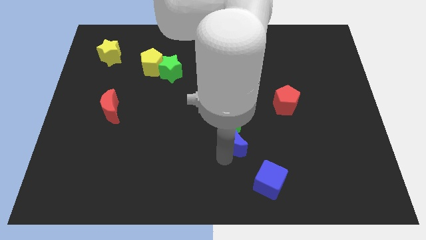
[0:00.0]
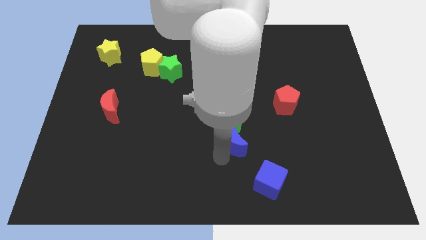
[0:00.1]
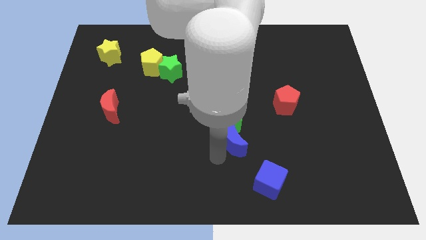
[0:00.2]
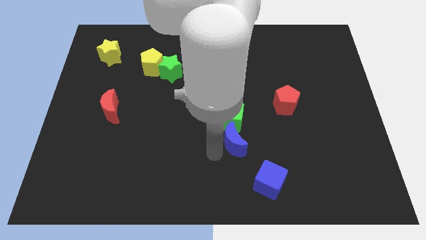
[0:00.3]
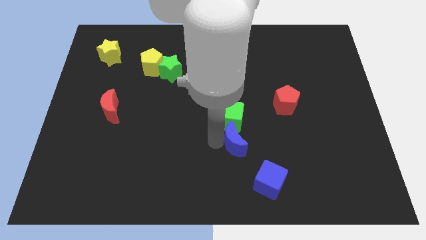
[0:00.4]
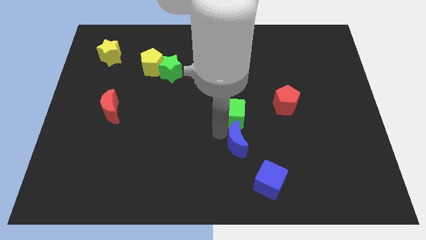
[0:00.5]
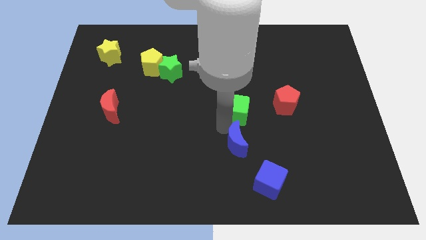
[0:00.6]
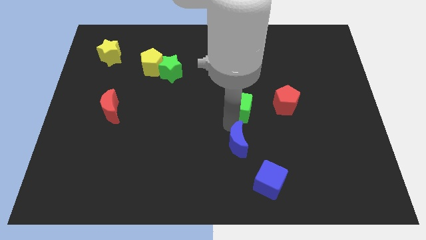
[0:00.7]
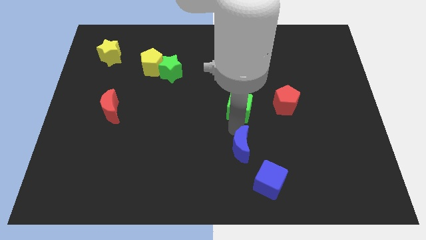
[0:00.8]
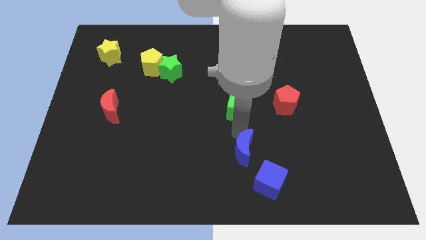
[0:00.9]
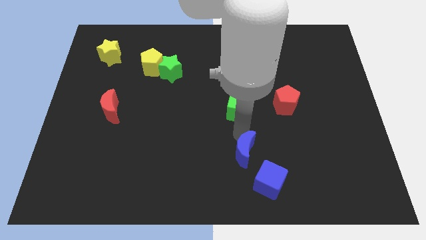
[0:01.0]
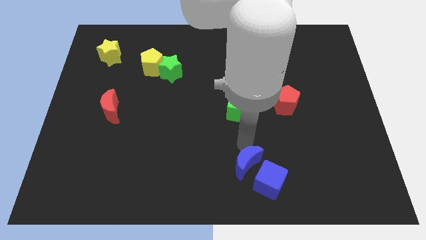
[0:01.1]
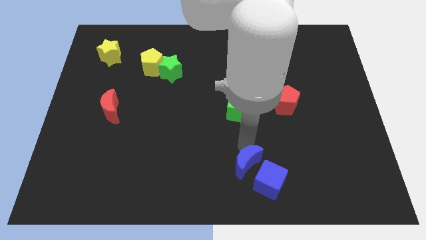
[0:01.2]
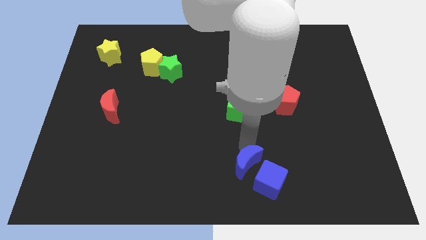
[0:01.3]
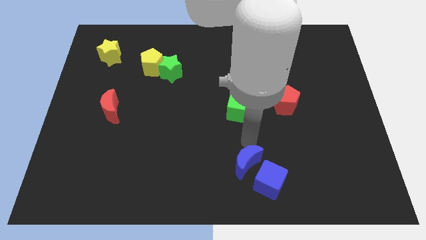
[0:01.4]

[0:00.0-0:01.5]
slide the blue crescent close to the blue cube

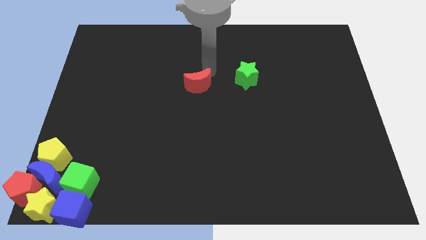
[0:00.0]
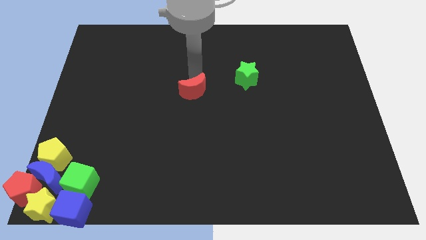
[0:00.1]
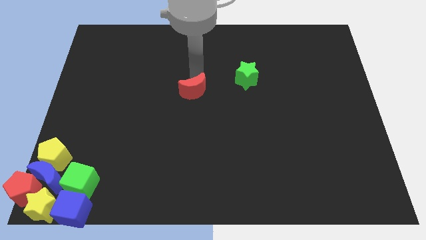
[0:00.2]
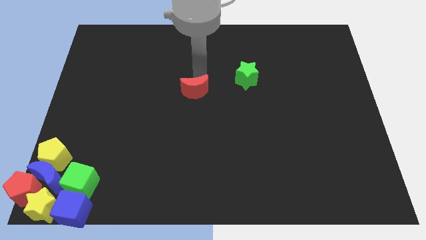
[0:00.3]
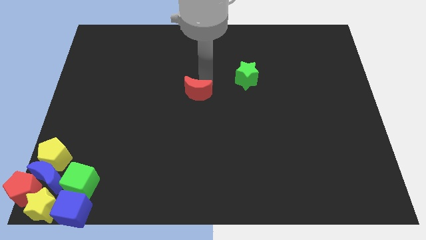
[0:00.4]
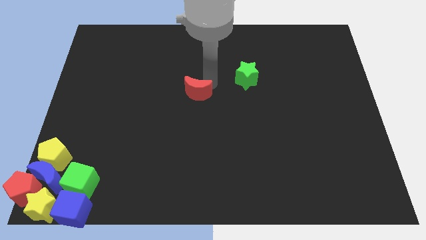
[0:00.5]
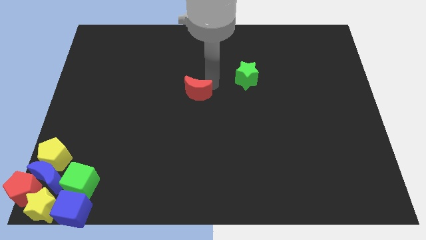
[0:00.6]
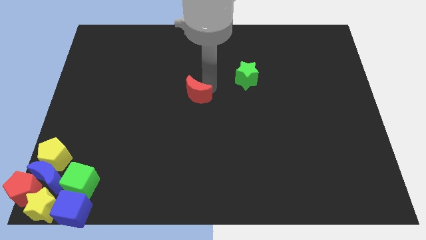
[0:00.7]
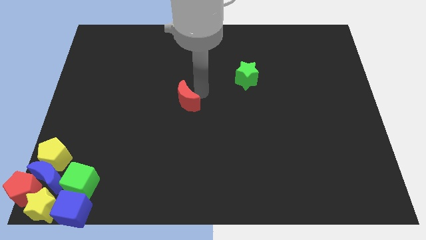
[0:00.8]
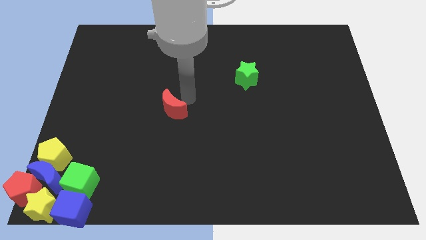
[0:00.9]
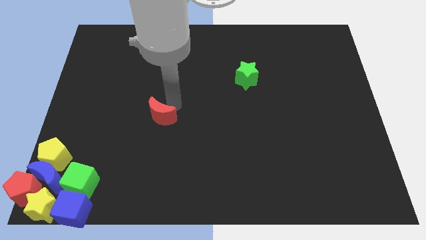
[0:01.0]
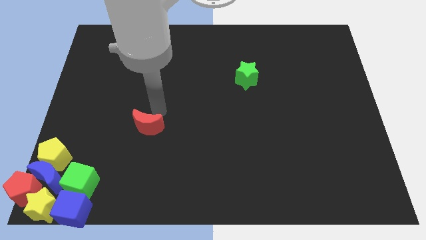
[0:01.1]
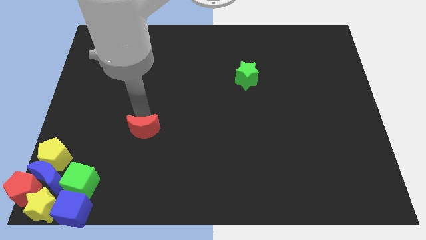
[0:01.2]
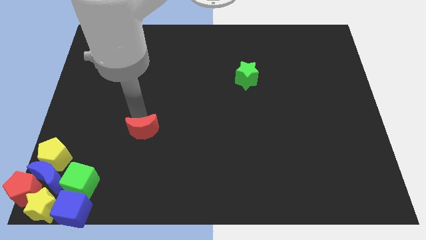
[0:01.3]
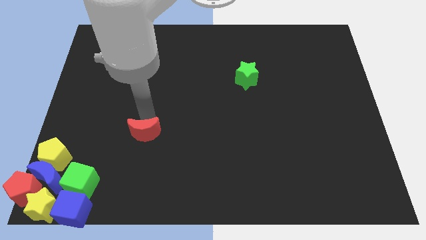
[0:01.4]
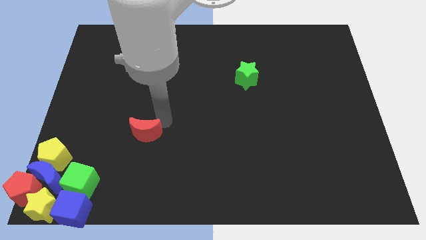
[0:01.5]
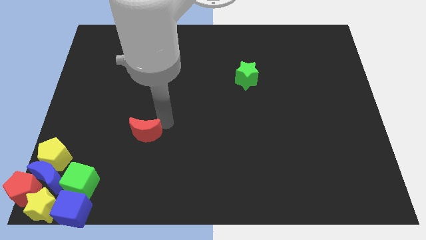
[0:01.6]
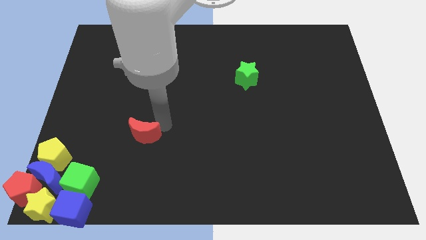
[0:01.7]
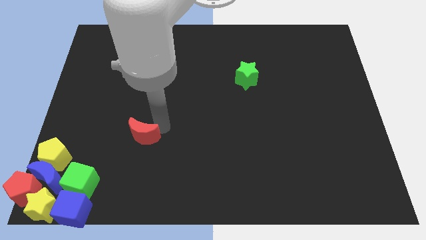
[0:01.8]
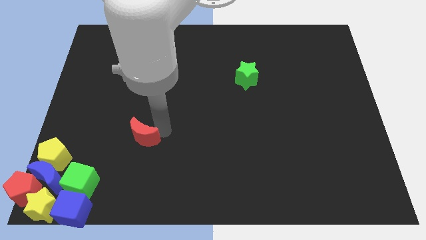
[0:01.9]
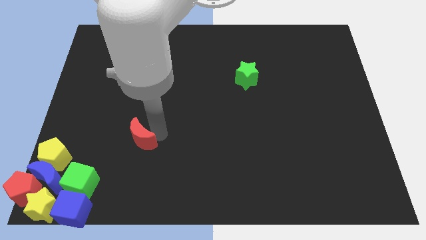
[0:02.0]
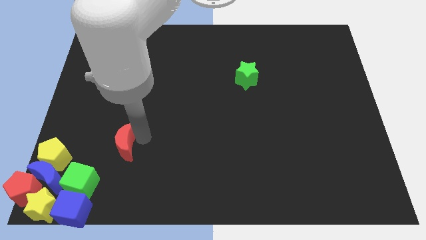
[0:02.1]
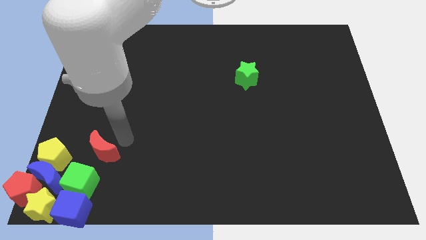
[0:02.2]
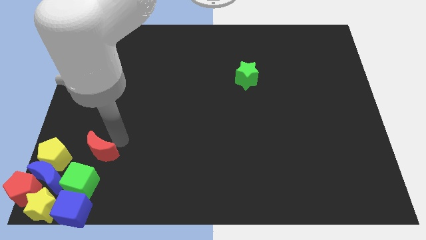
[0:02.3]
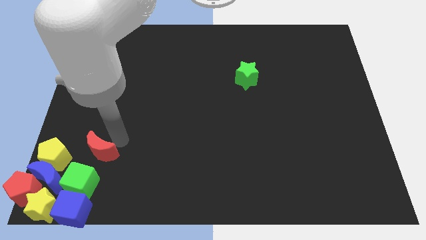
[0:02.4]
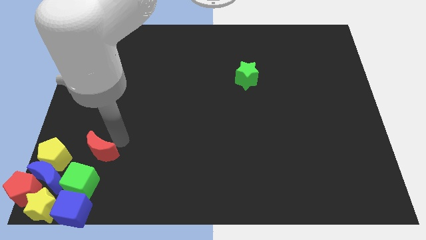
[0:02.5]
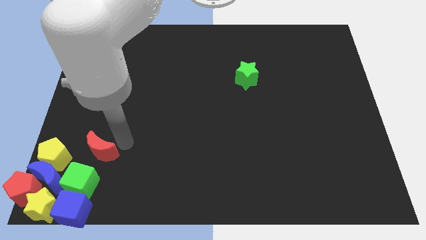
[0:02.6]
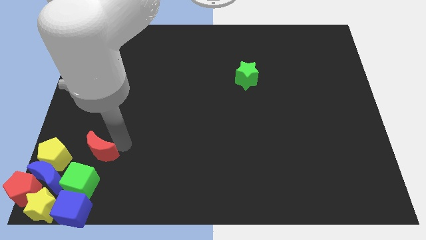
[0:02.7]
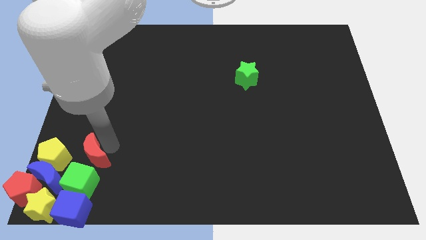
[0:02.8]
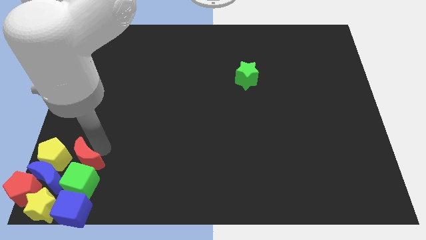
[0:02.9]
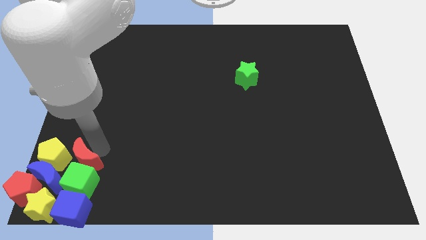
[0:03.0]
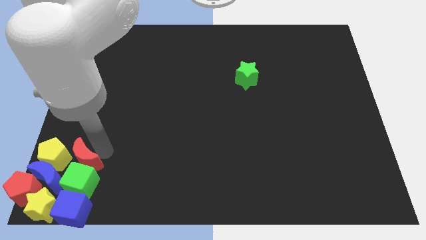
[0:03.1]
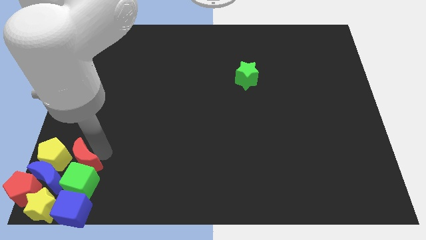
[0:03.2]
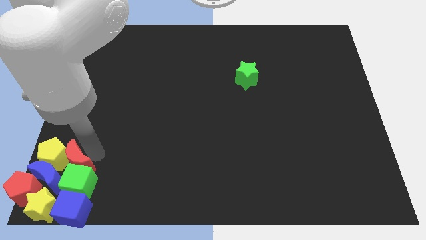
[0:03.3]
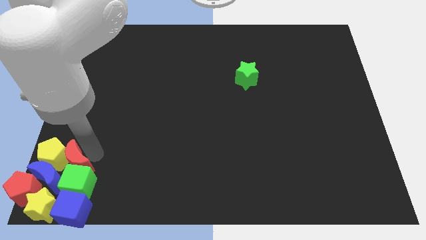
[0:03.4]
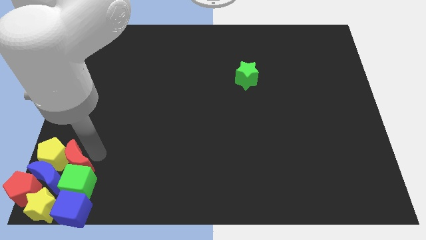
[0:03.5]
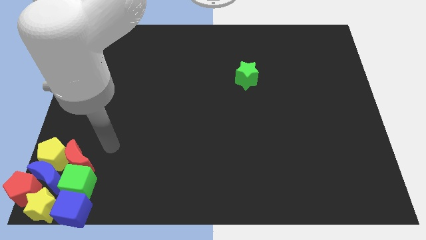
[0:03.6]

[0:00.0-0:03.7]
move the red moon into the group of blocks

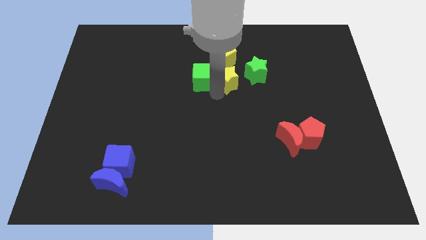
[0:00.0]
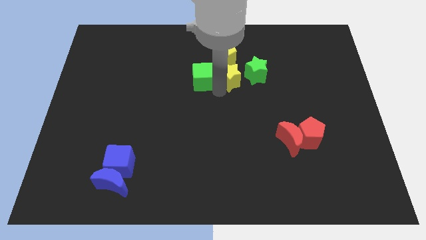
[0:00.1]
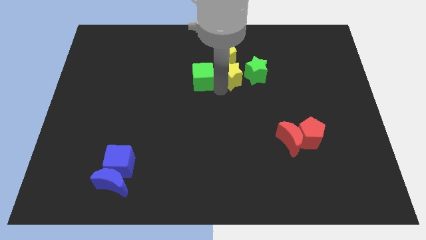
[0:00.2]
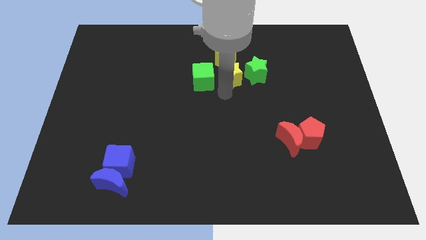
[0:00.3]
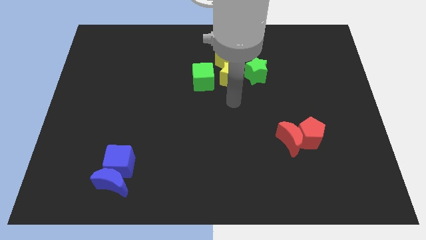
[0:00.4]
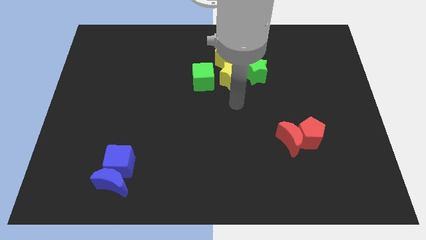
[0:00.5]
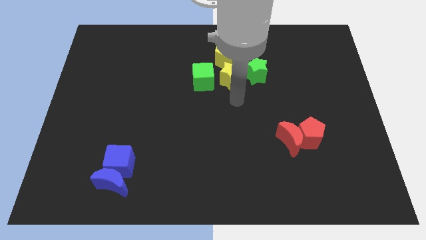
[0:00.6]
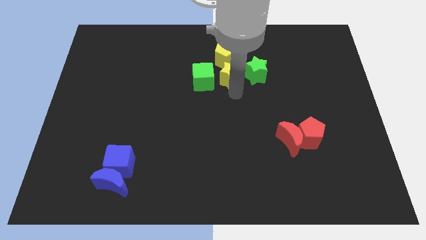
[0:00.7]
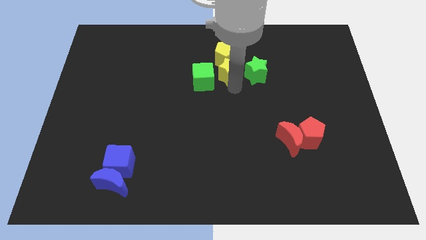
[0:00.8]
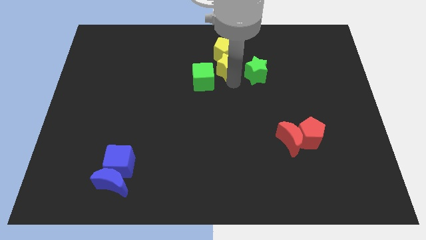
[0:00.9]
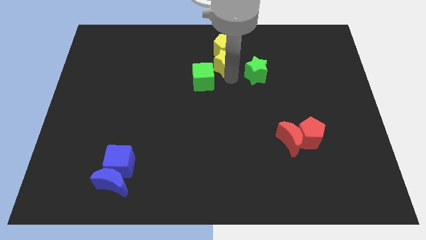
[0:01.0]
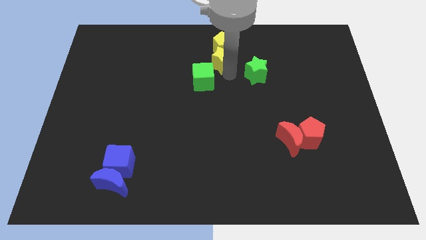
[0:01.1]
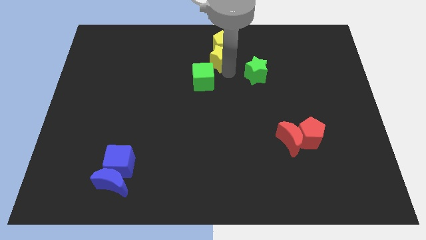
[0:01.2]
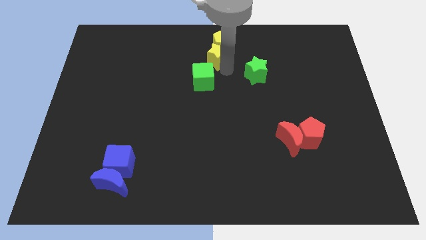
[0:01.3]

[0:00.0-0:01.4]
push yellow star into yellow pentagon

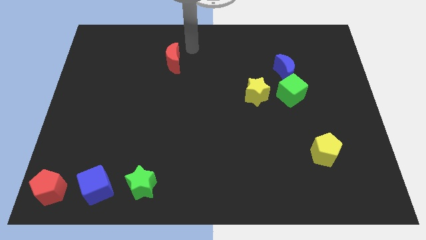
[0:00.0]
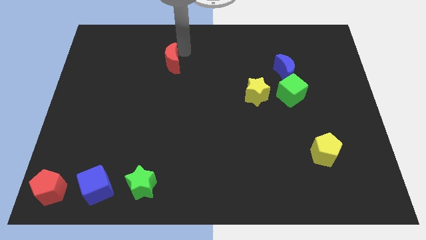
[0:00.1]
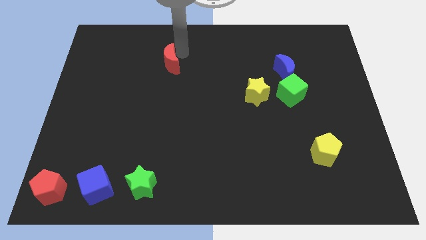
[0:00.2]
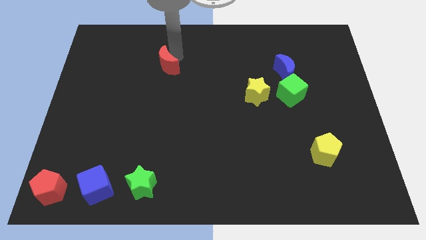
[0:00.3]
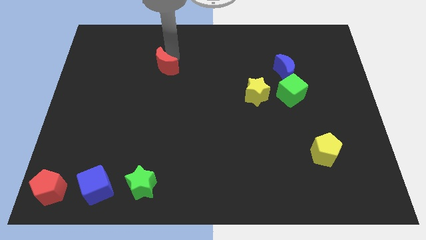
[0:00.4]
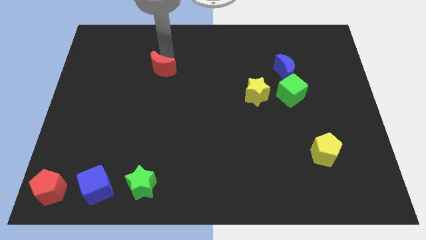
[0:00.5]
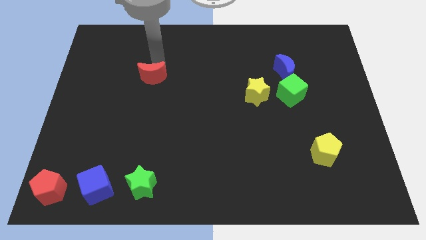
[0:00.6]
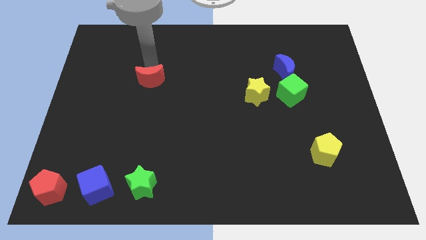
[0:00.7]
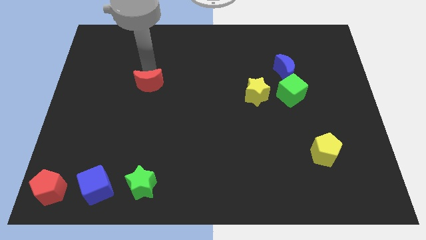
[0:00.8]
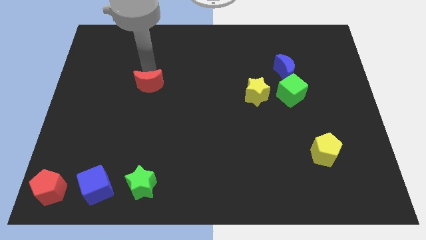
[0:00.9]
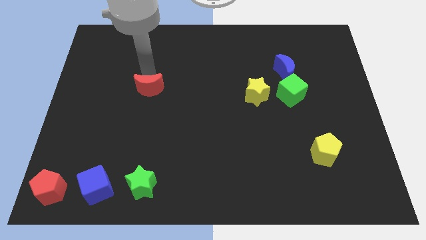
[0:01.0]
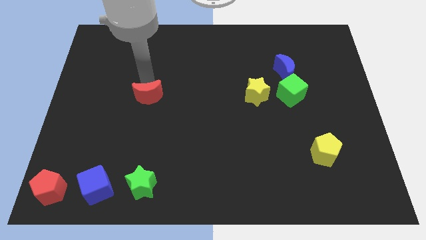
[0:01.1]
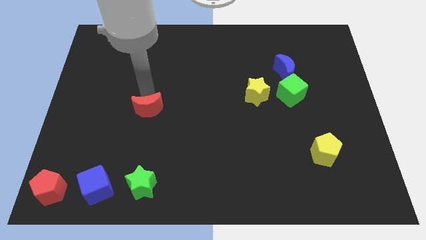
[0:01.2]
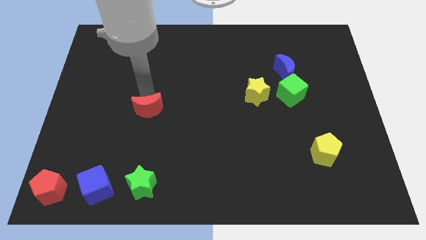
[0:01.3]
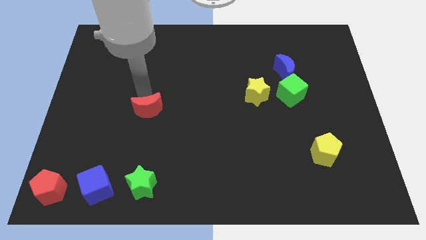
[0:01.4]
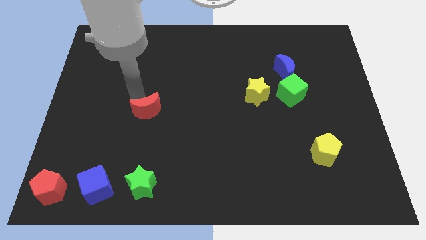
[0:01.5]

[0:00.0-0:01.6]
slightly push the red moon towards the bottom side of the board

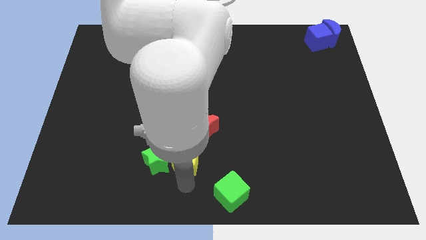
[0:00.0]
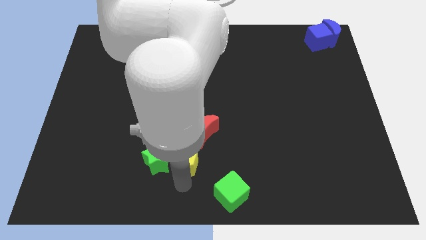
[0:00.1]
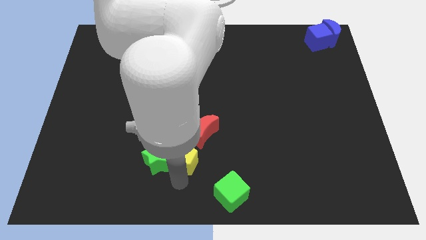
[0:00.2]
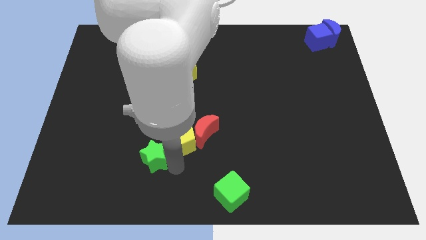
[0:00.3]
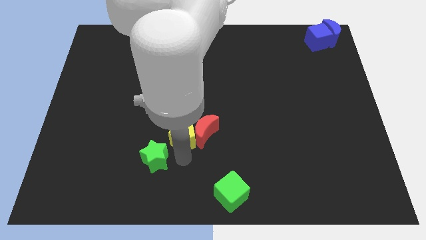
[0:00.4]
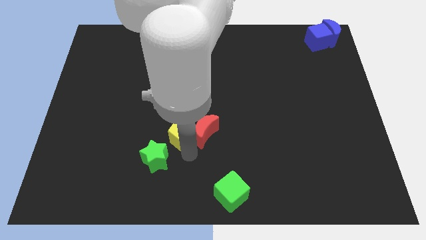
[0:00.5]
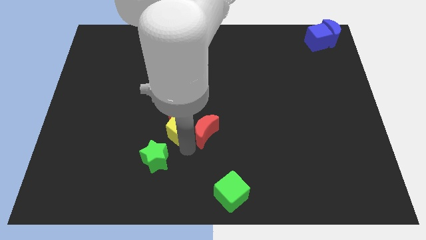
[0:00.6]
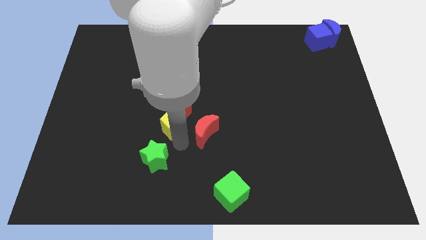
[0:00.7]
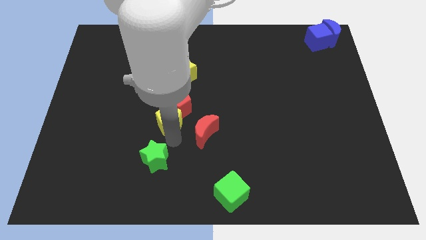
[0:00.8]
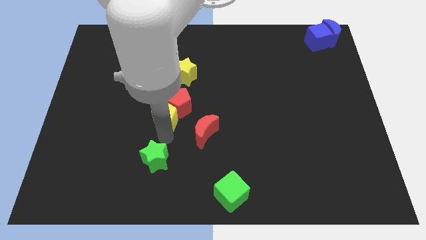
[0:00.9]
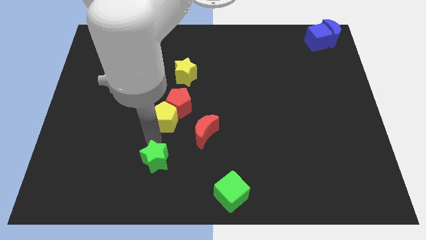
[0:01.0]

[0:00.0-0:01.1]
move yellow pentagon to the bottom of red pentagon
